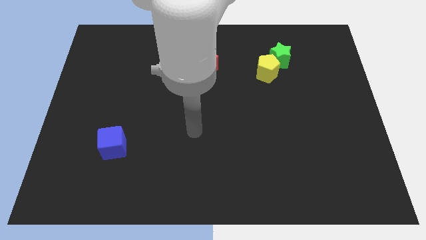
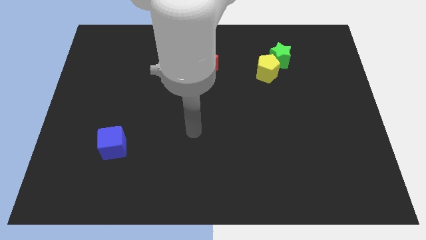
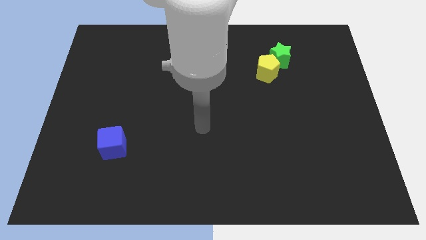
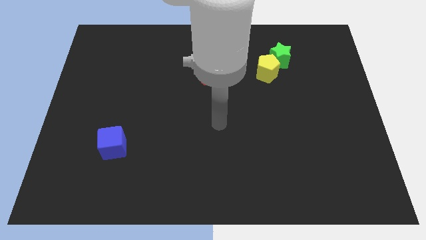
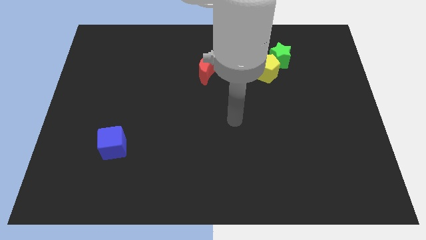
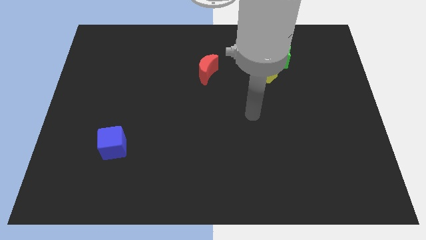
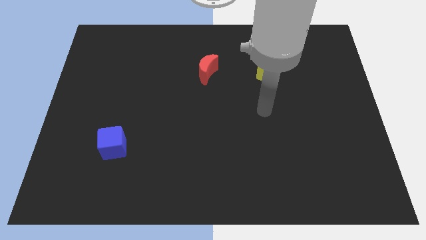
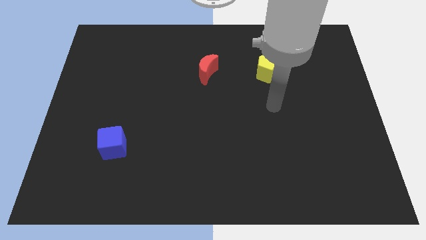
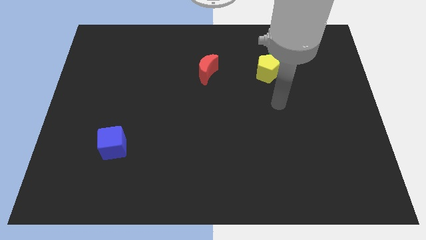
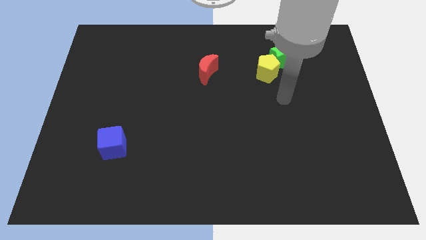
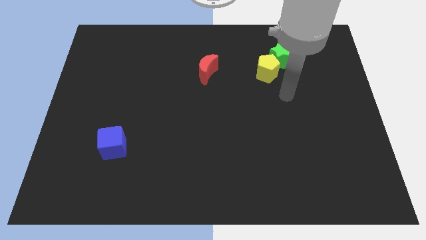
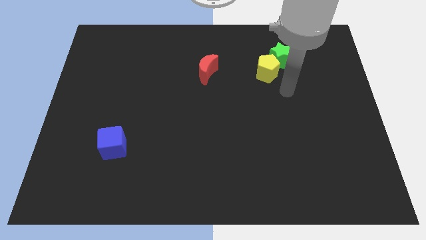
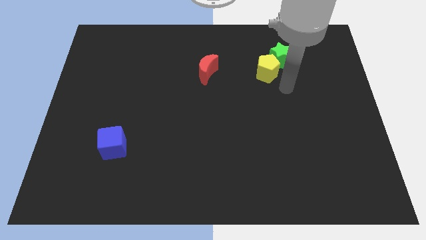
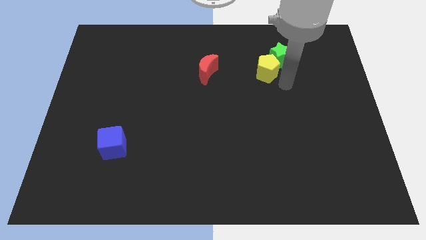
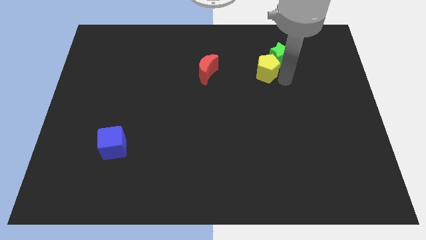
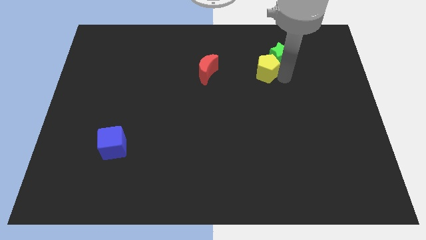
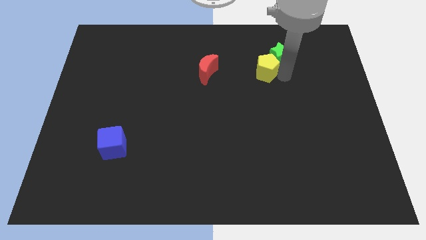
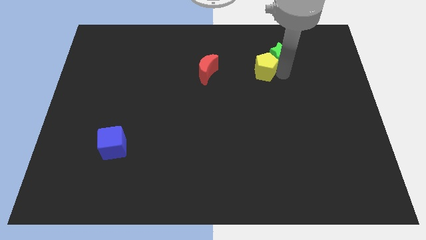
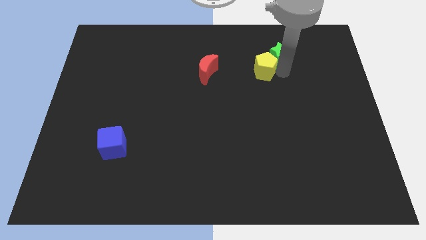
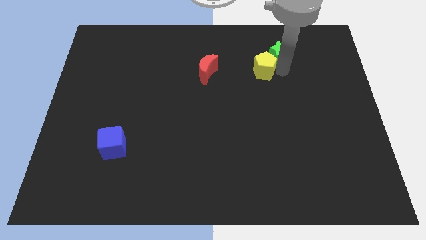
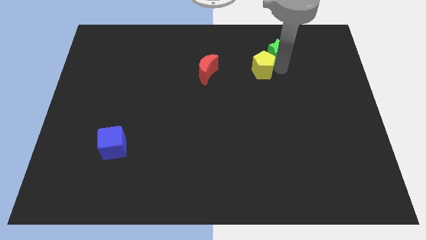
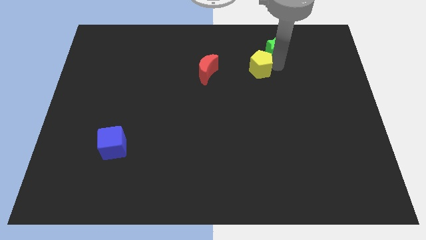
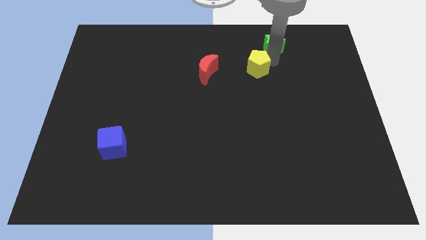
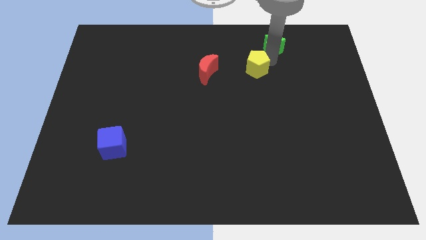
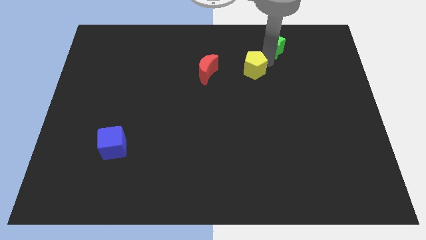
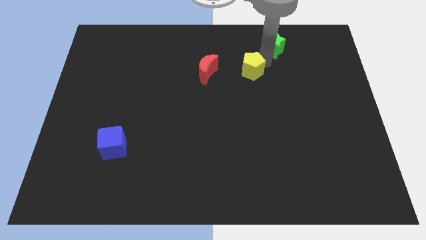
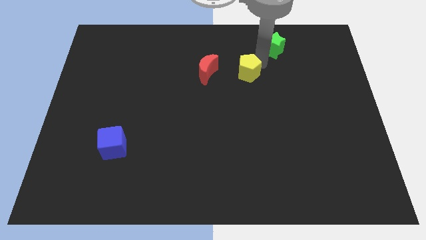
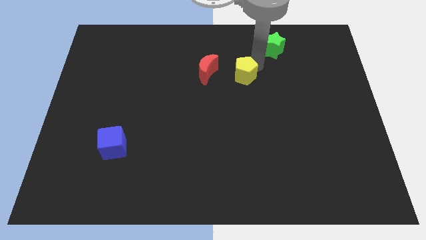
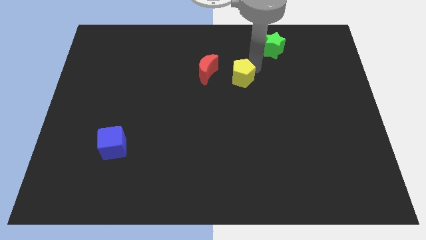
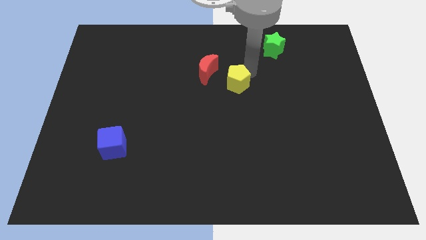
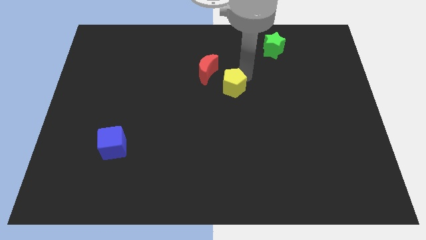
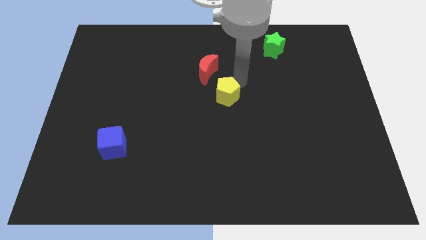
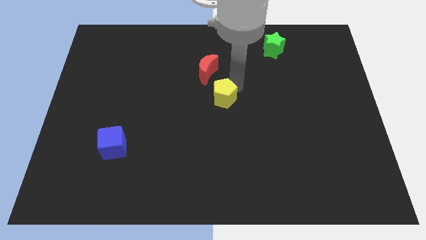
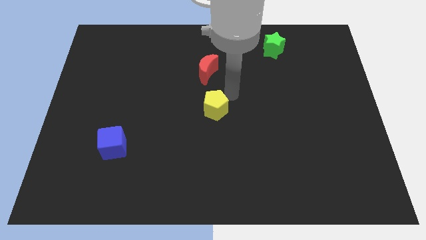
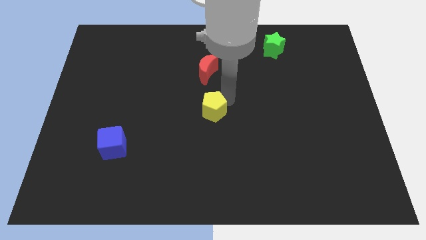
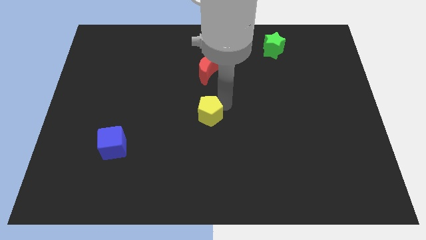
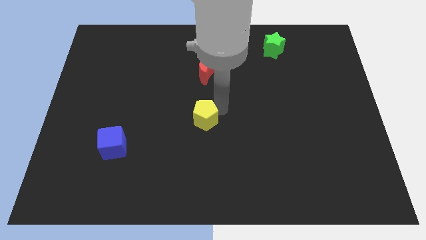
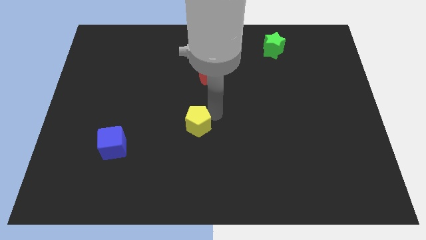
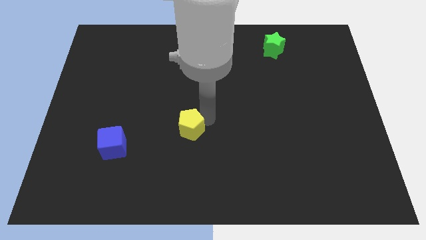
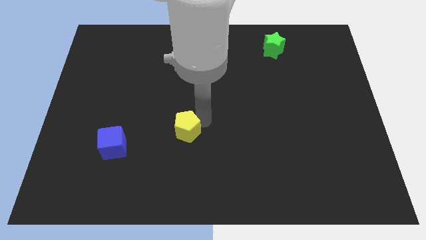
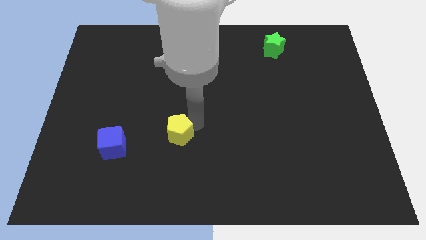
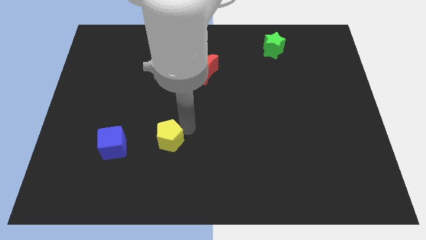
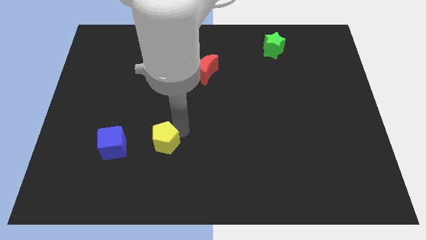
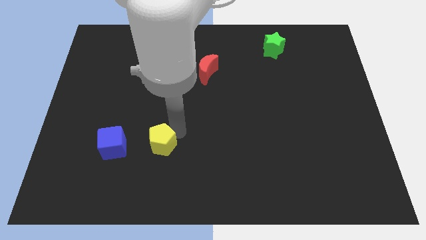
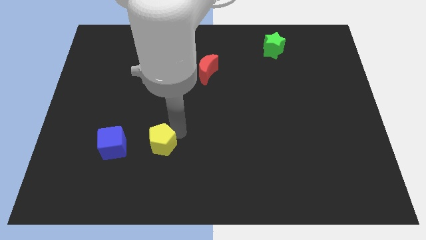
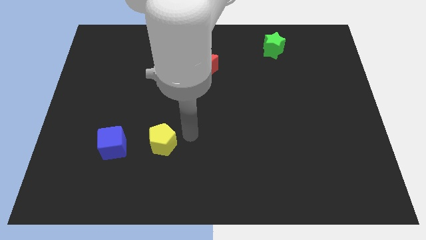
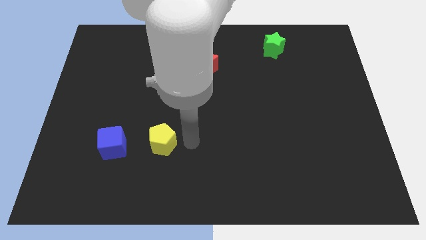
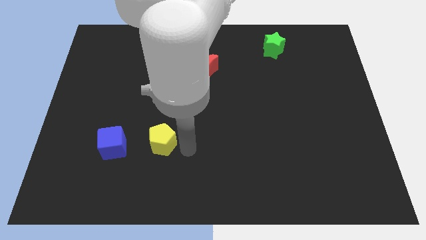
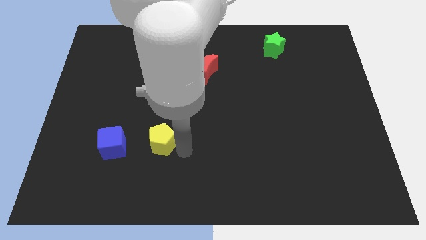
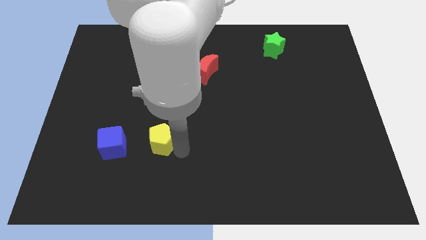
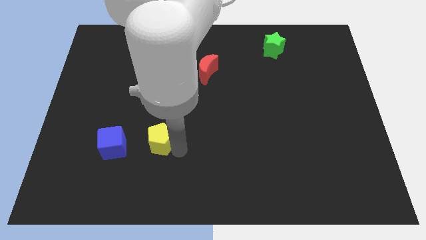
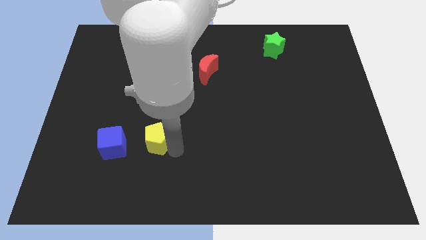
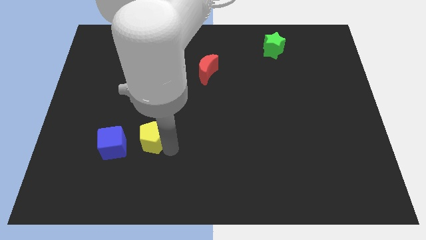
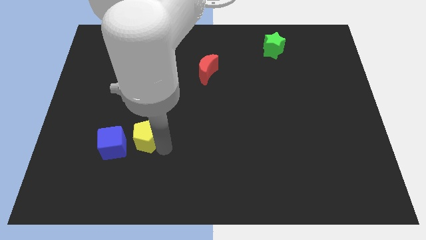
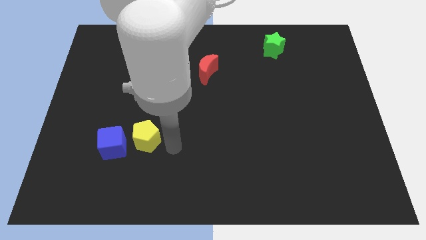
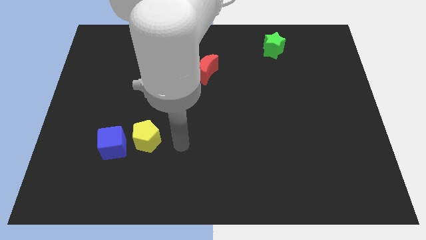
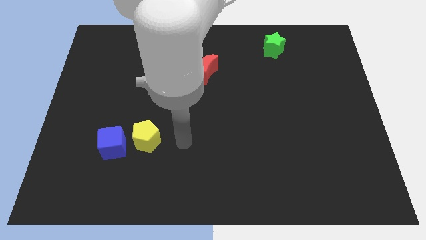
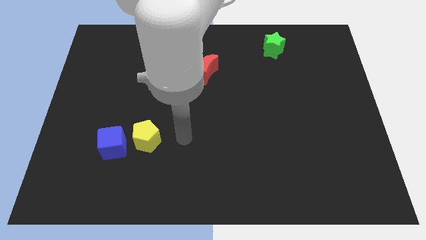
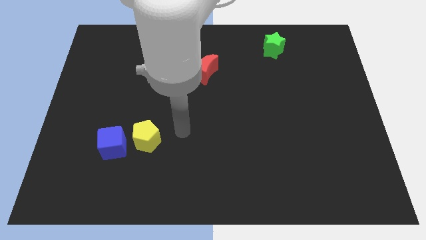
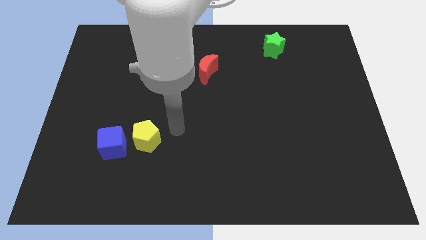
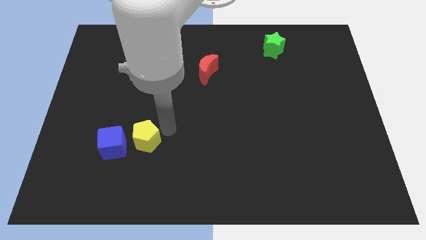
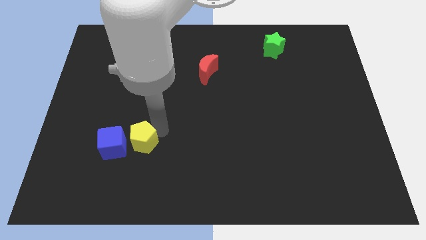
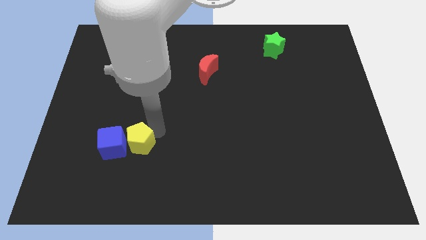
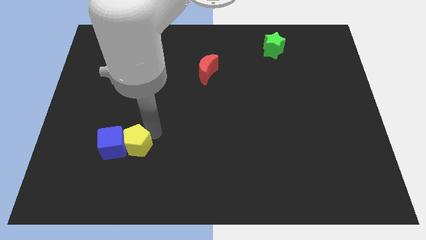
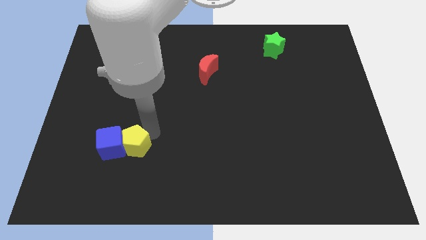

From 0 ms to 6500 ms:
slide the yellow pentagon close to the cube

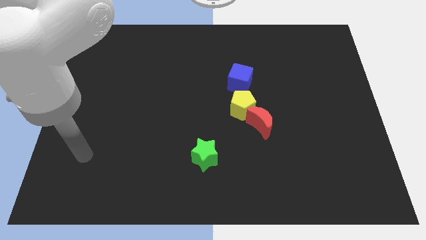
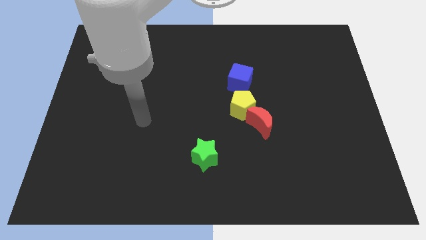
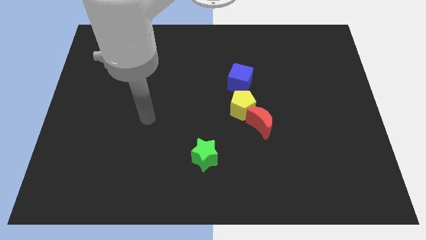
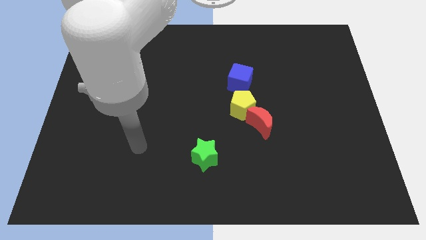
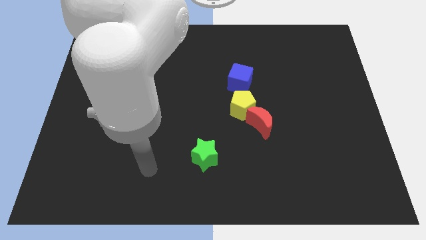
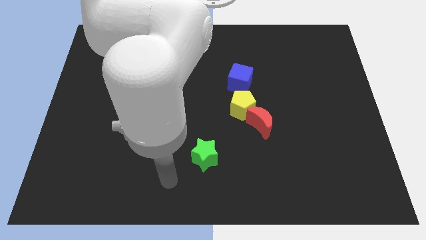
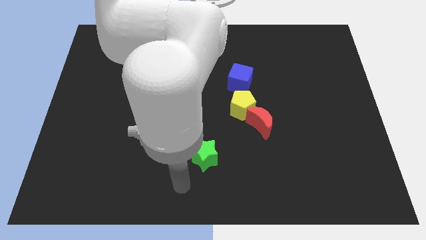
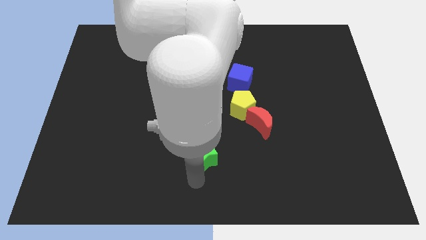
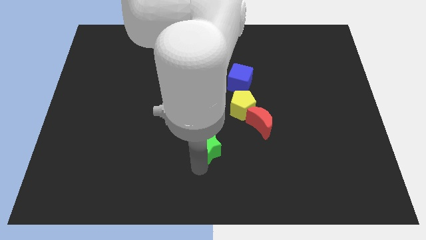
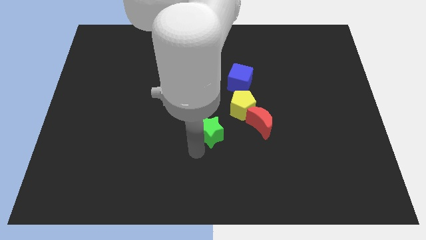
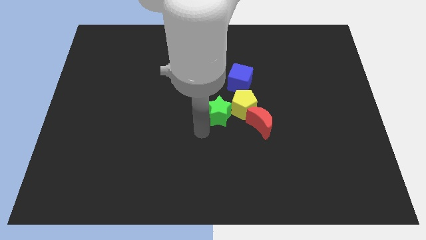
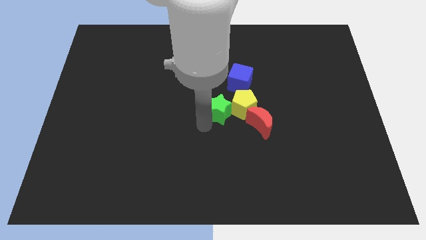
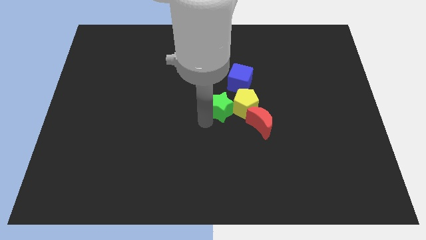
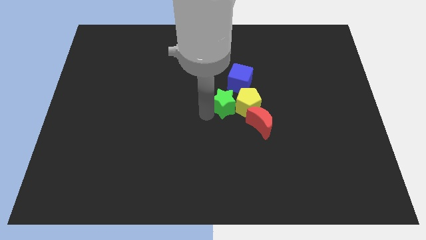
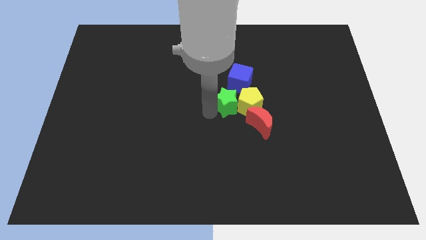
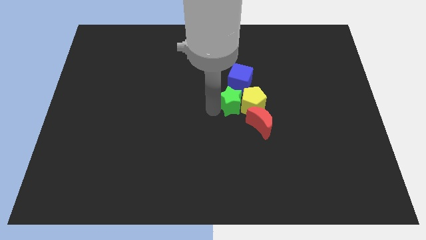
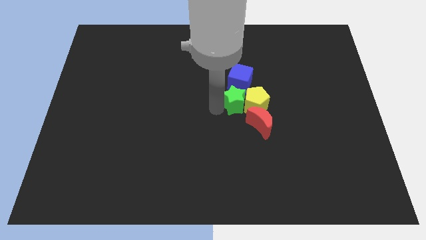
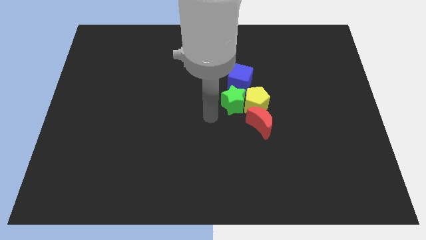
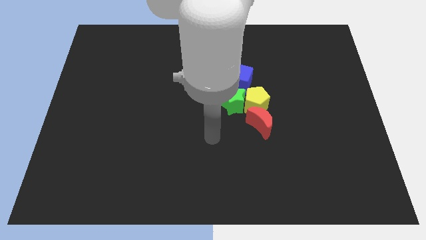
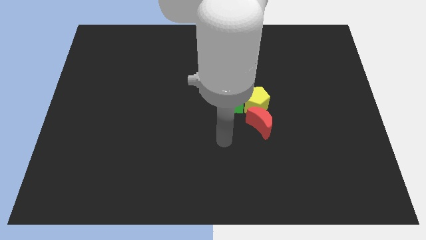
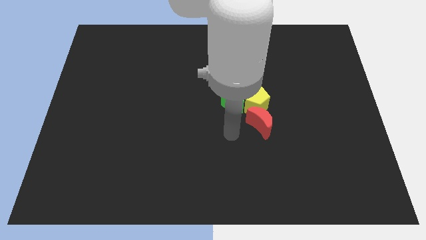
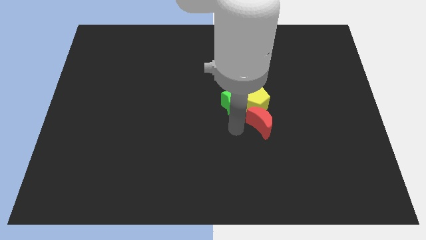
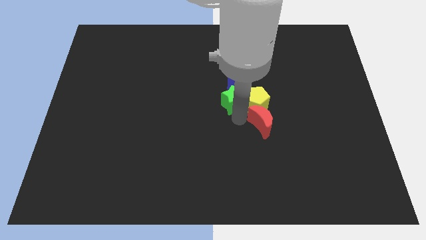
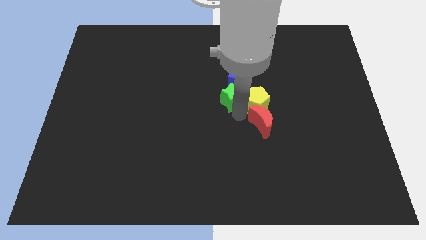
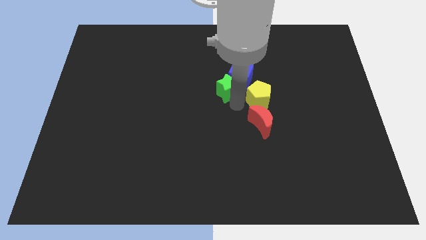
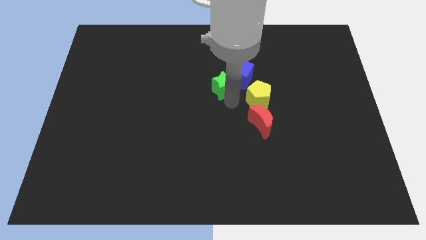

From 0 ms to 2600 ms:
push the green block towards the cube
